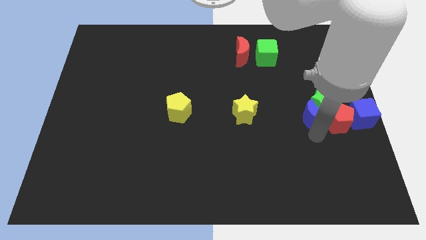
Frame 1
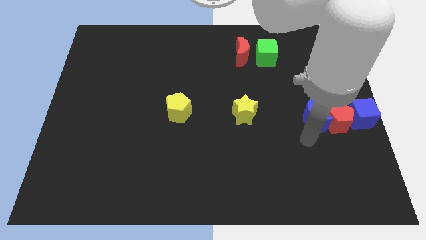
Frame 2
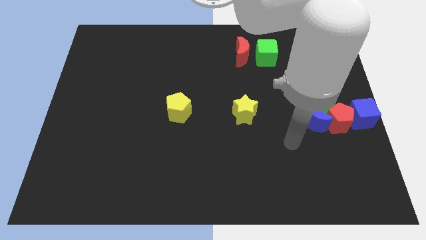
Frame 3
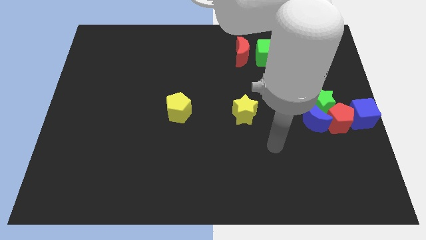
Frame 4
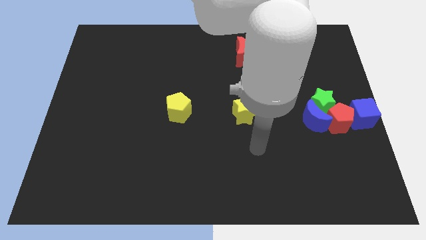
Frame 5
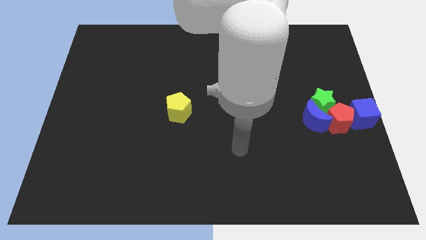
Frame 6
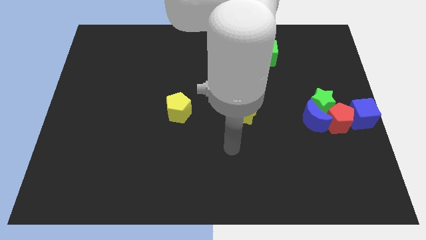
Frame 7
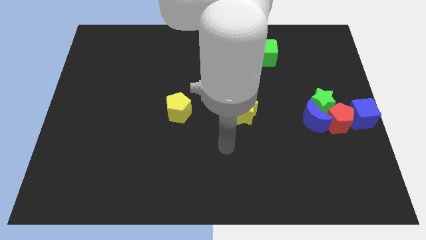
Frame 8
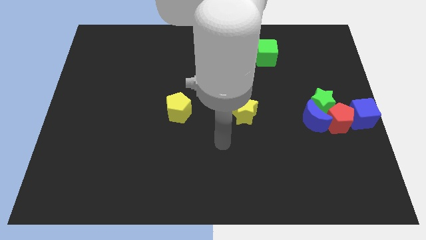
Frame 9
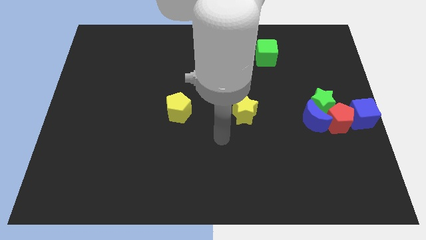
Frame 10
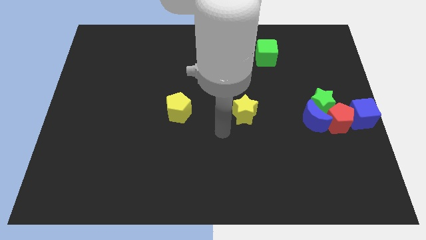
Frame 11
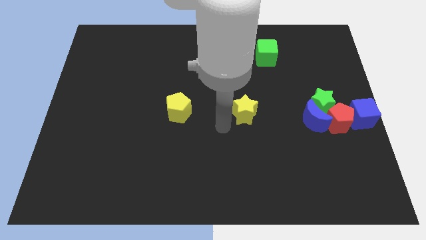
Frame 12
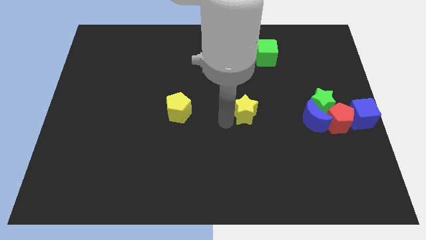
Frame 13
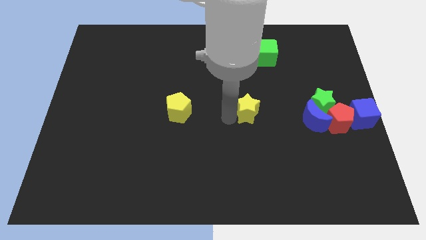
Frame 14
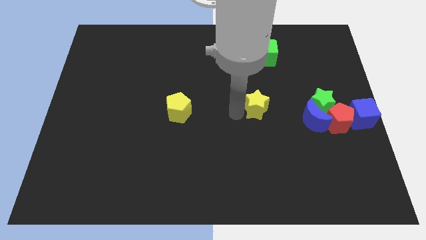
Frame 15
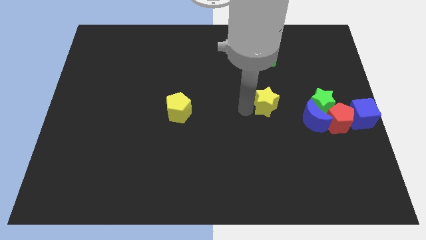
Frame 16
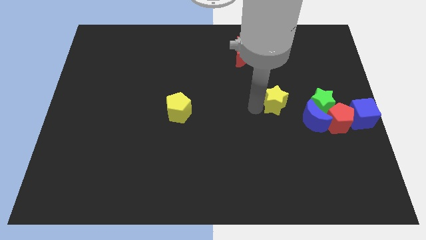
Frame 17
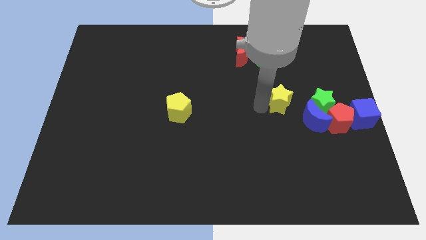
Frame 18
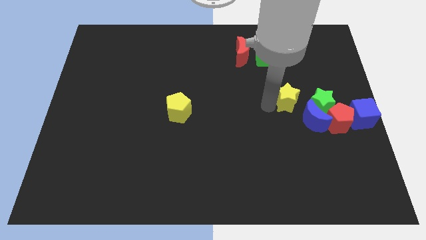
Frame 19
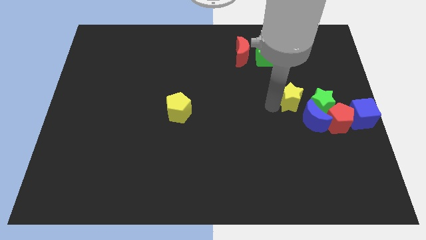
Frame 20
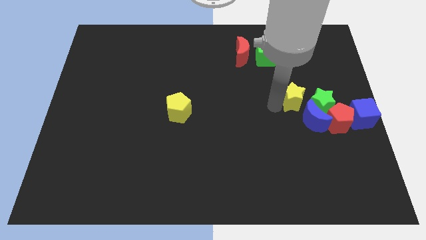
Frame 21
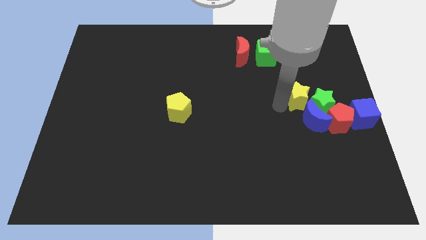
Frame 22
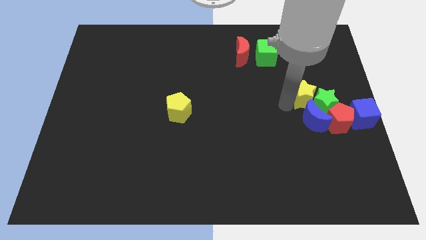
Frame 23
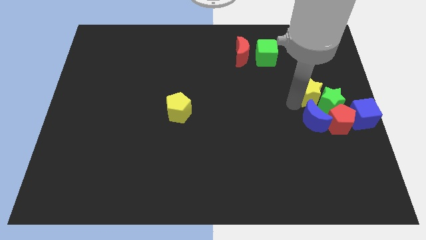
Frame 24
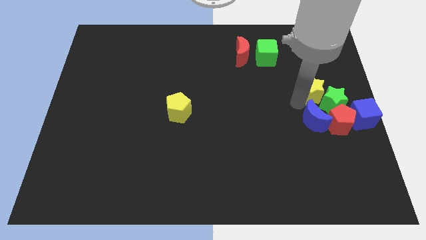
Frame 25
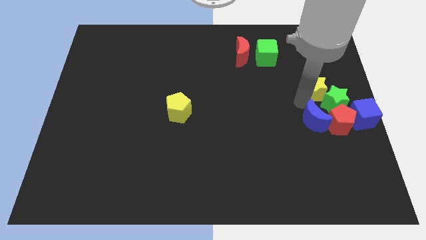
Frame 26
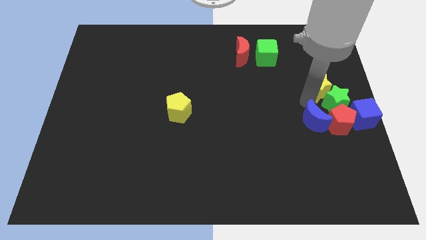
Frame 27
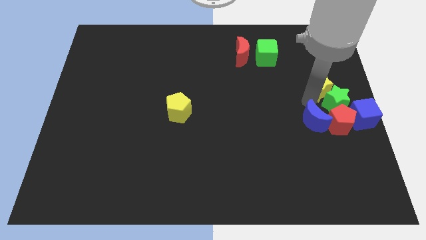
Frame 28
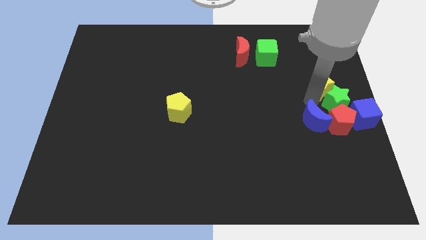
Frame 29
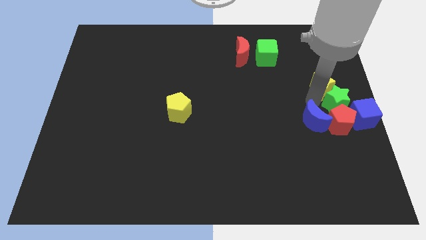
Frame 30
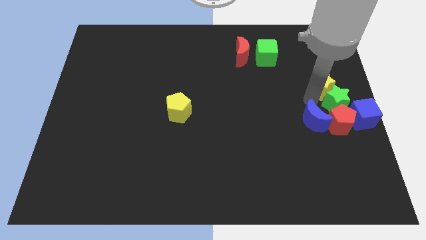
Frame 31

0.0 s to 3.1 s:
push yellow star in to green star

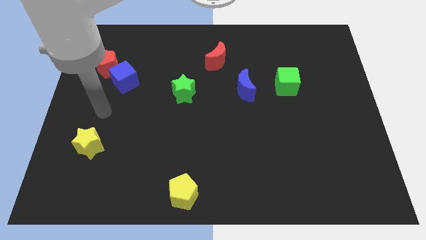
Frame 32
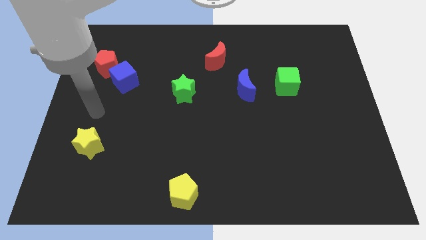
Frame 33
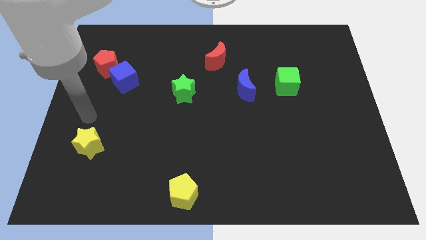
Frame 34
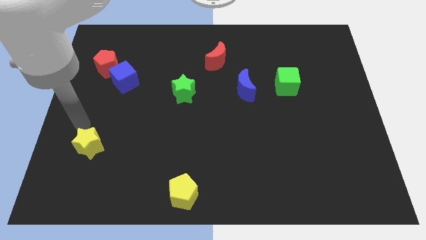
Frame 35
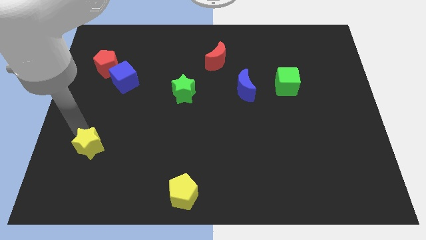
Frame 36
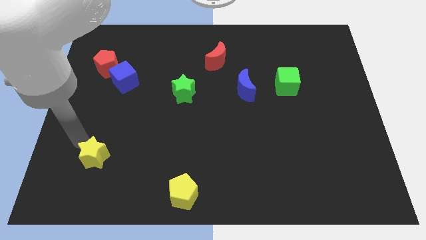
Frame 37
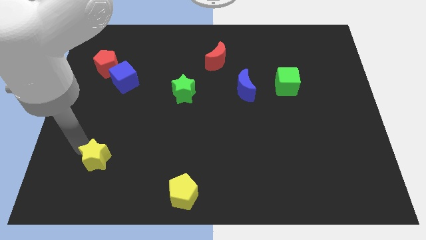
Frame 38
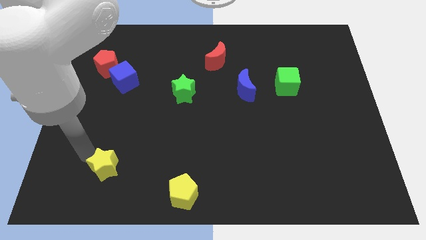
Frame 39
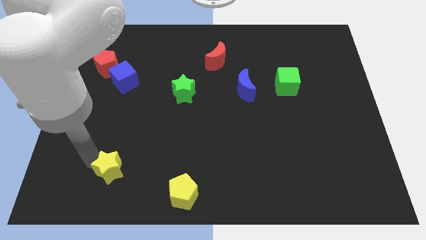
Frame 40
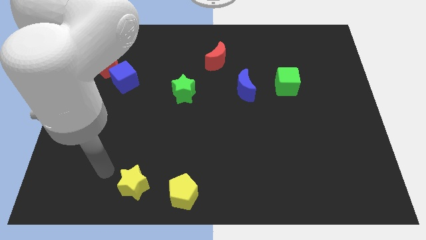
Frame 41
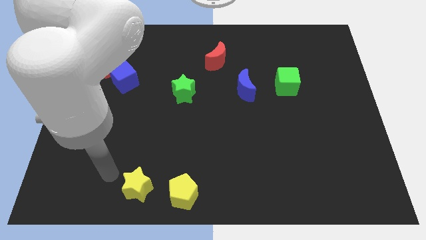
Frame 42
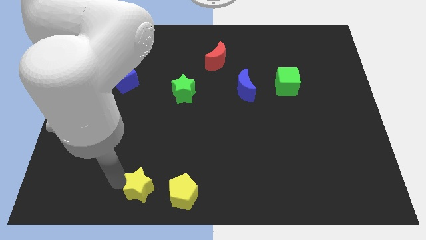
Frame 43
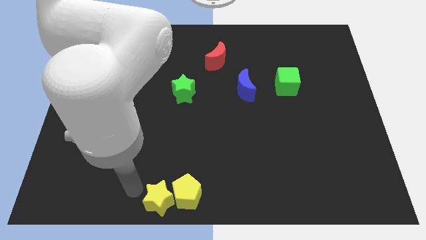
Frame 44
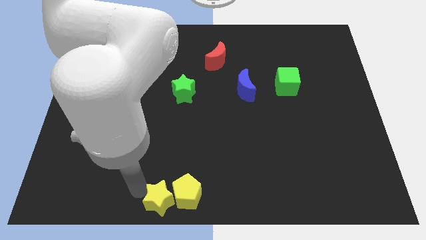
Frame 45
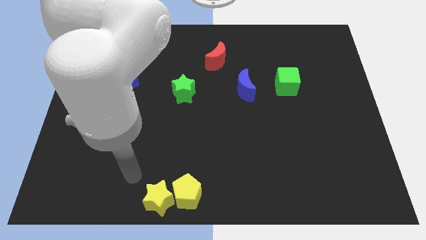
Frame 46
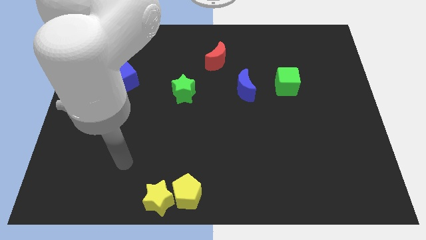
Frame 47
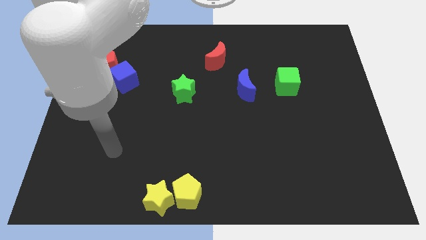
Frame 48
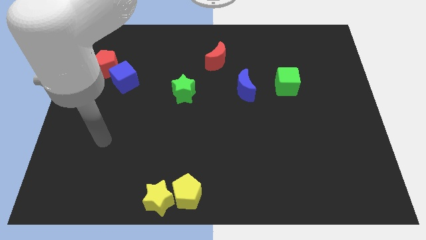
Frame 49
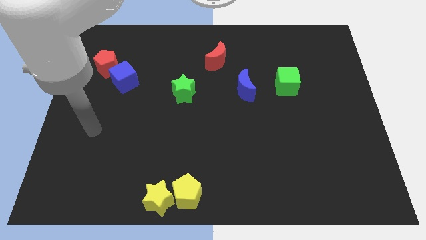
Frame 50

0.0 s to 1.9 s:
push the yellow star into the yellow pentagon

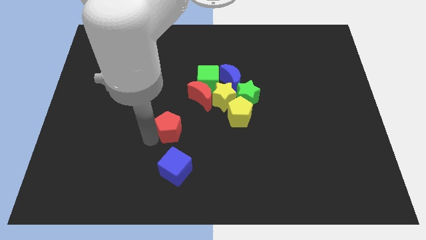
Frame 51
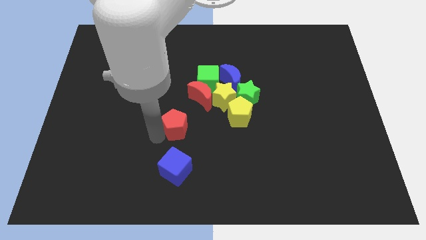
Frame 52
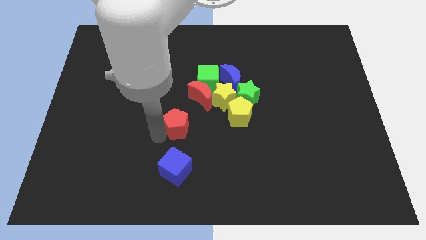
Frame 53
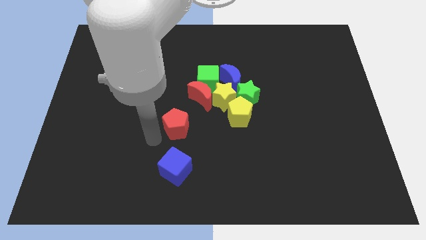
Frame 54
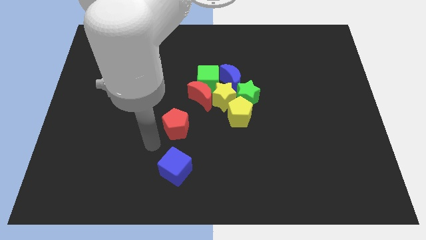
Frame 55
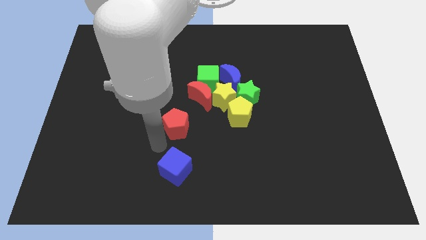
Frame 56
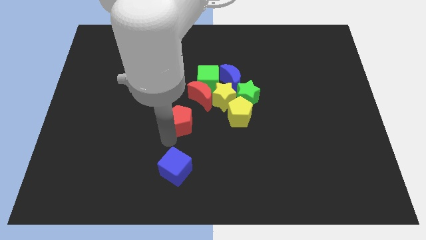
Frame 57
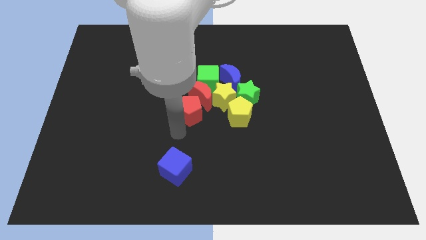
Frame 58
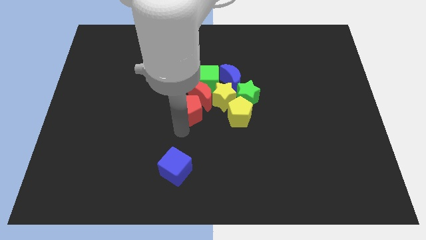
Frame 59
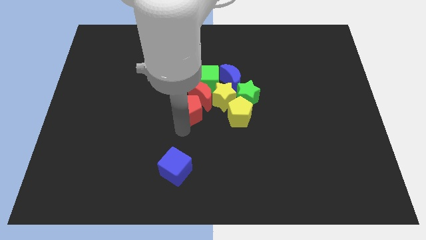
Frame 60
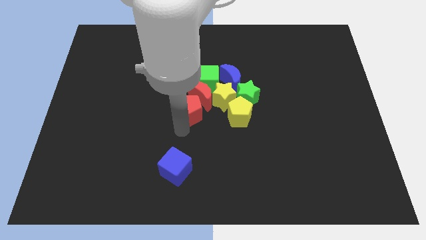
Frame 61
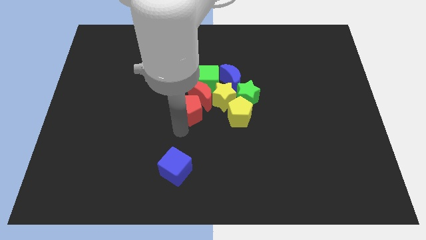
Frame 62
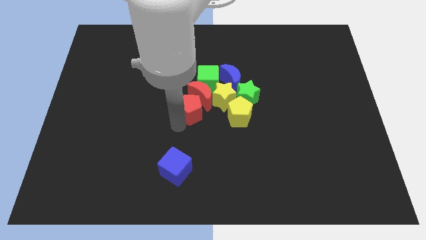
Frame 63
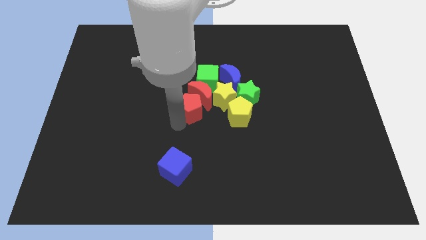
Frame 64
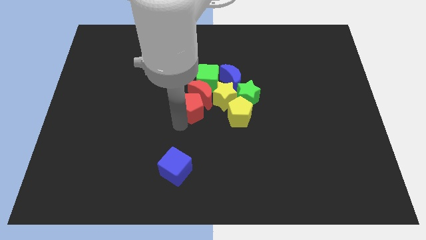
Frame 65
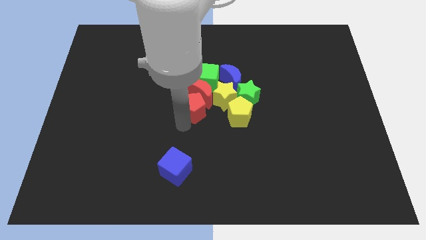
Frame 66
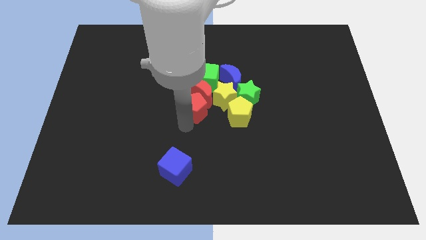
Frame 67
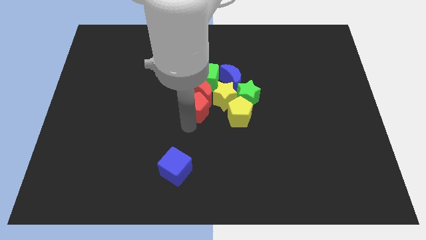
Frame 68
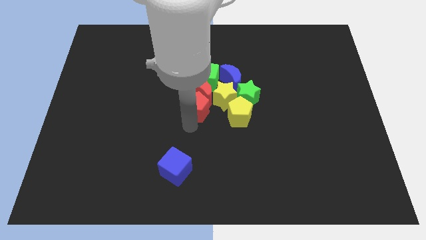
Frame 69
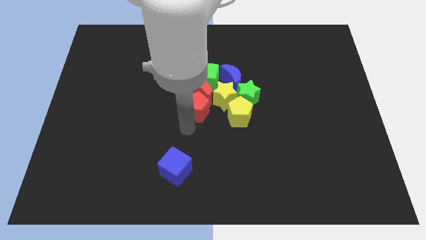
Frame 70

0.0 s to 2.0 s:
push the red pentagon into the red crescent

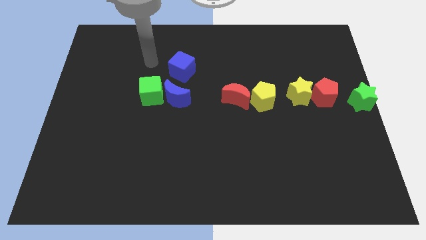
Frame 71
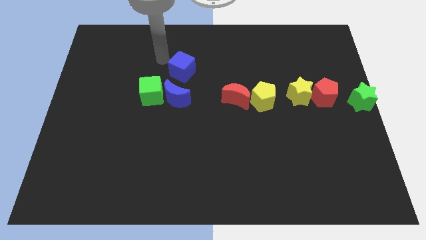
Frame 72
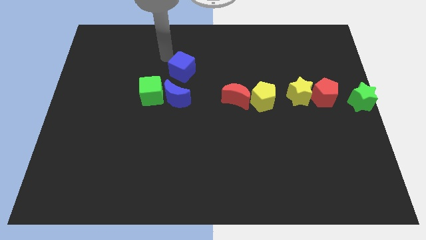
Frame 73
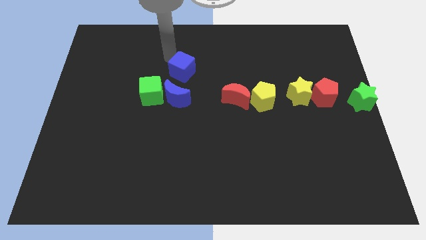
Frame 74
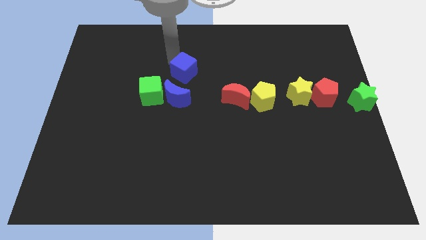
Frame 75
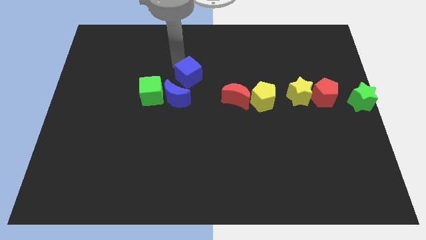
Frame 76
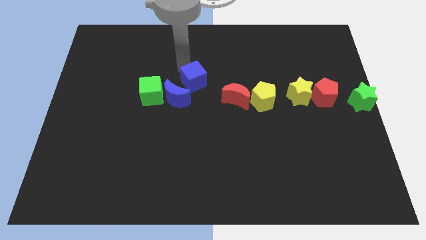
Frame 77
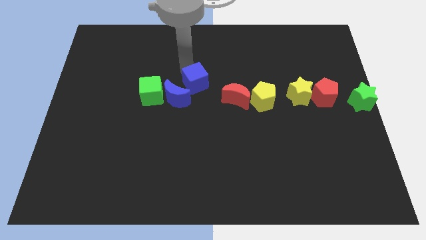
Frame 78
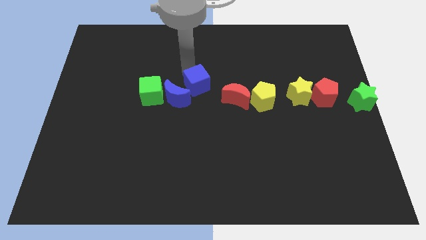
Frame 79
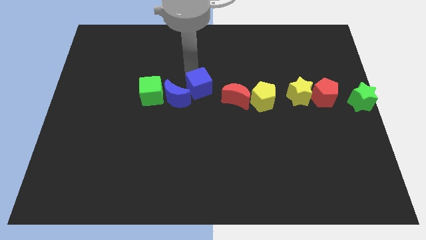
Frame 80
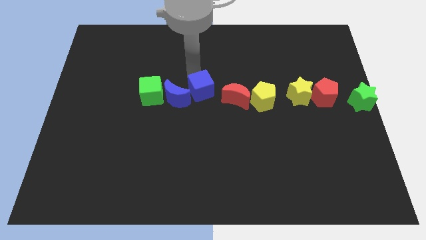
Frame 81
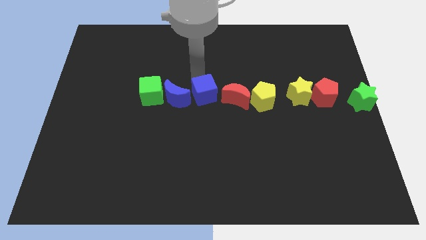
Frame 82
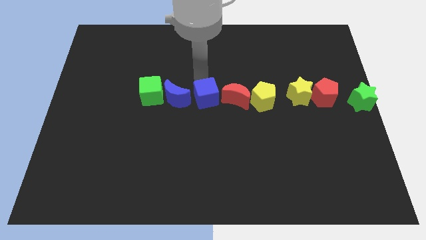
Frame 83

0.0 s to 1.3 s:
push the blue cube in between the red moon and blue moon

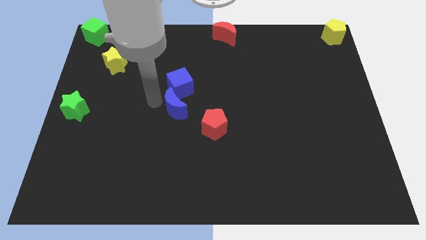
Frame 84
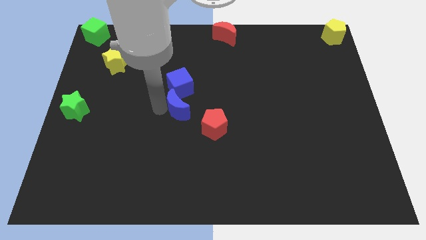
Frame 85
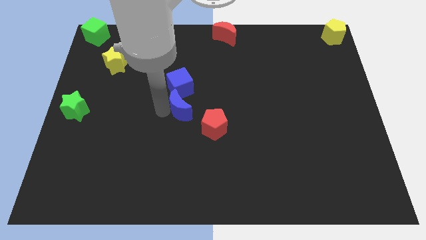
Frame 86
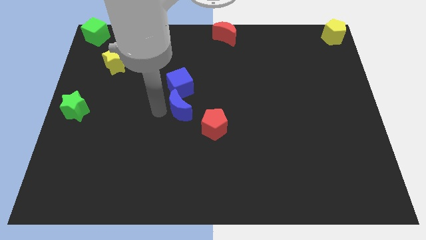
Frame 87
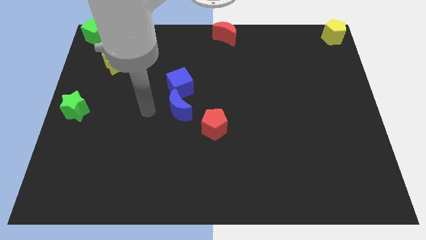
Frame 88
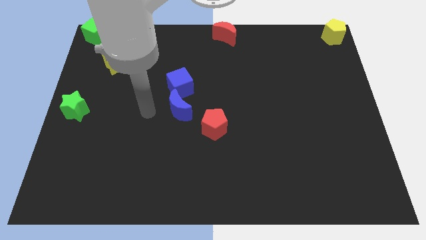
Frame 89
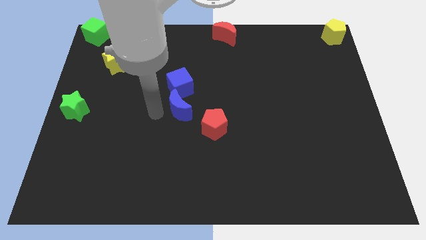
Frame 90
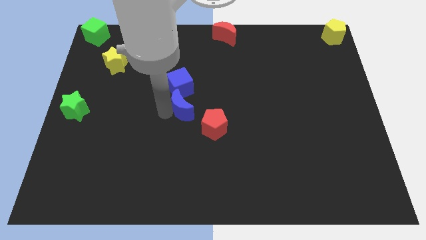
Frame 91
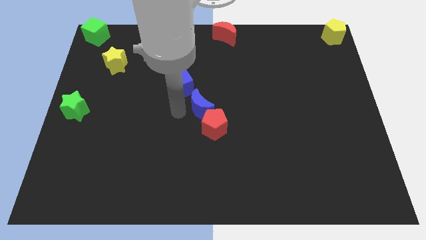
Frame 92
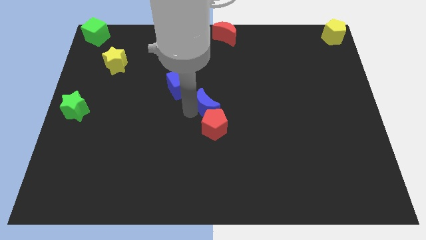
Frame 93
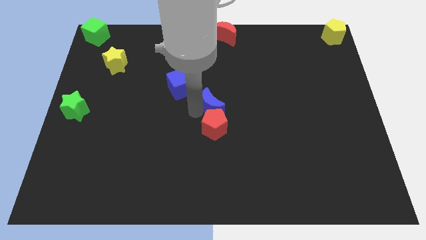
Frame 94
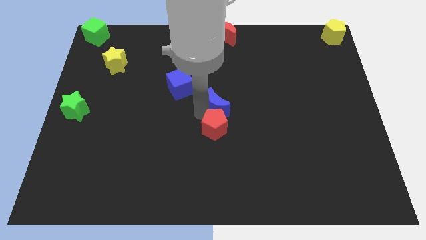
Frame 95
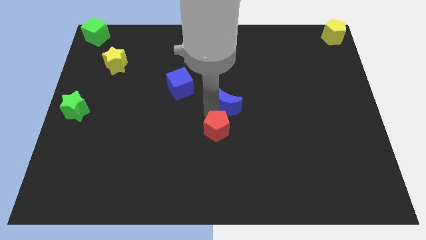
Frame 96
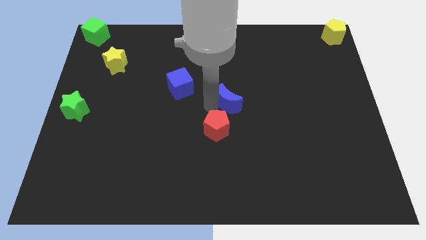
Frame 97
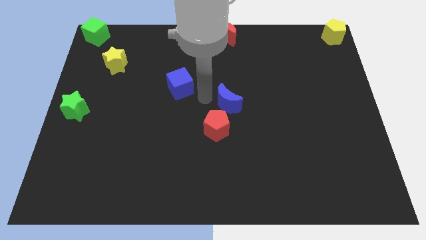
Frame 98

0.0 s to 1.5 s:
separate the blue moon from the blue cube
